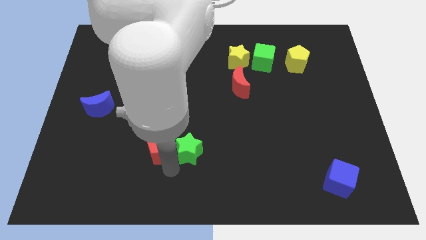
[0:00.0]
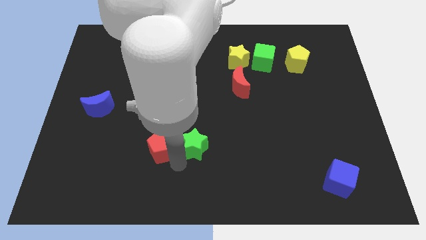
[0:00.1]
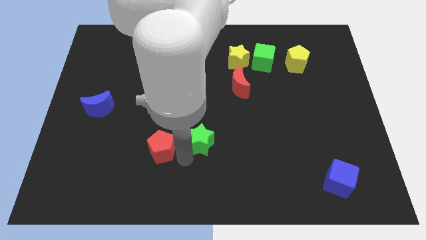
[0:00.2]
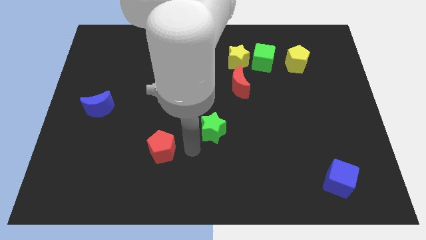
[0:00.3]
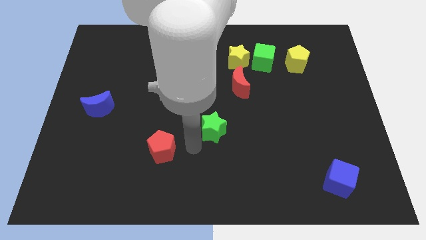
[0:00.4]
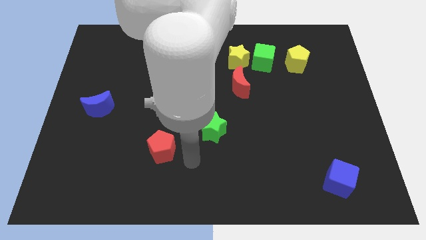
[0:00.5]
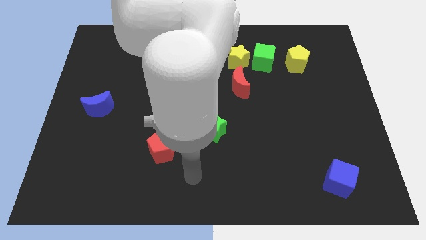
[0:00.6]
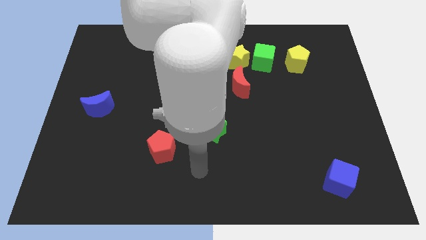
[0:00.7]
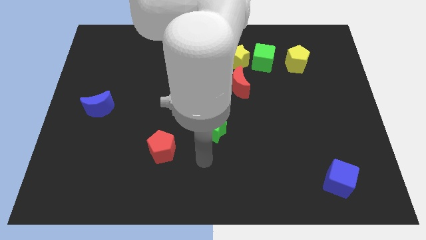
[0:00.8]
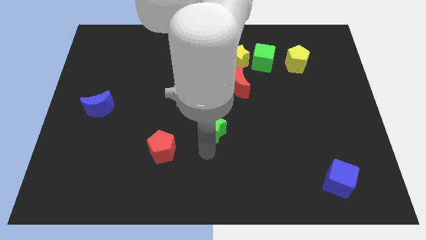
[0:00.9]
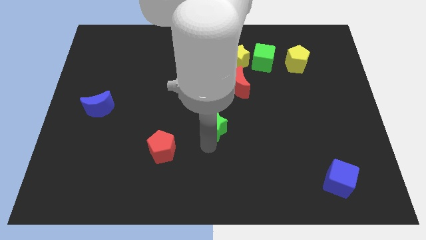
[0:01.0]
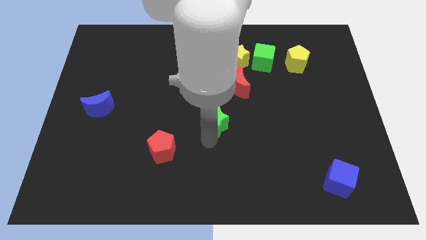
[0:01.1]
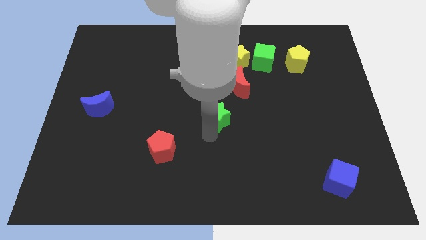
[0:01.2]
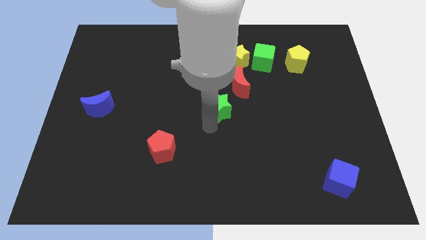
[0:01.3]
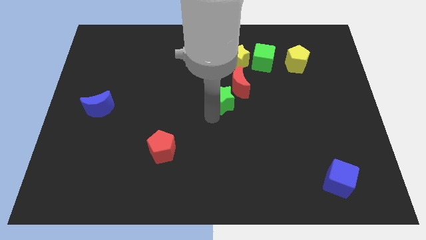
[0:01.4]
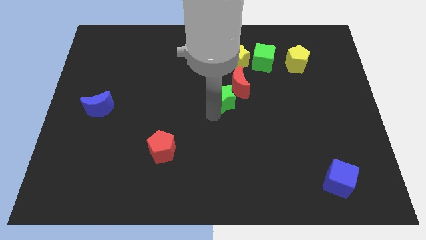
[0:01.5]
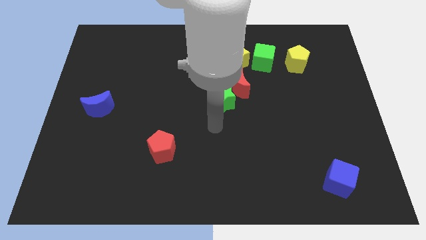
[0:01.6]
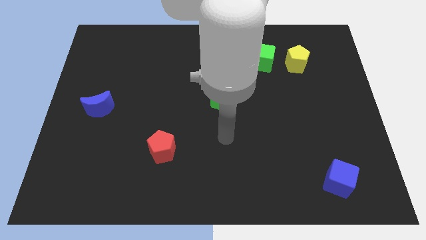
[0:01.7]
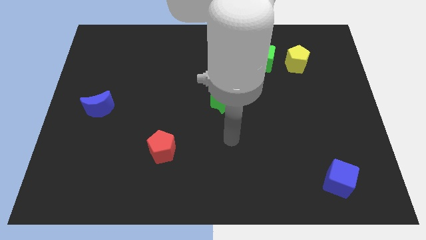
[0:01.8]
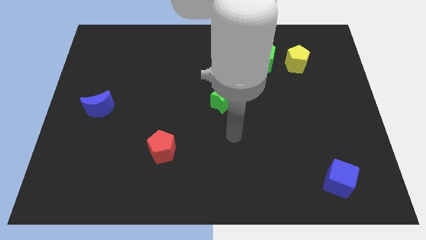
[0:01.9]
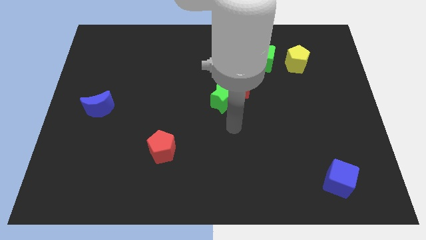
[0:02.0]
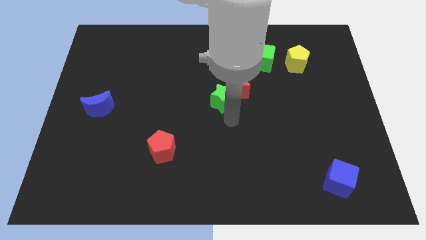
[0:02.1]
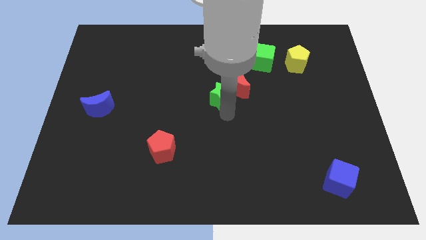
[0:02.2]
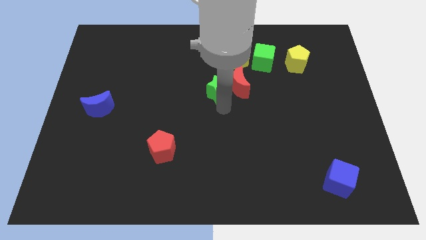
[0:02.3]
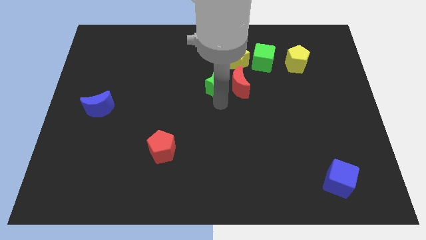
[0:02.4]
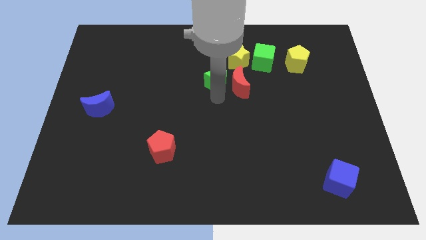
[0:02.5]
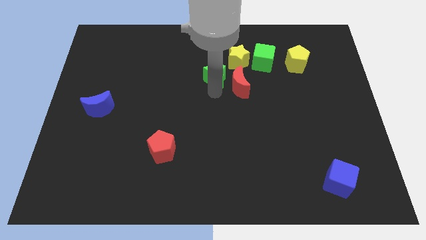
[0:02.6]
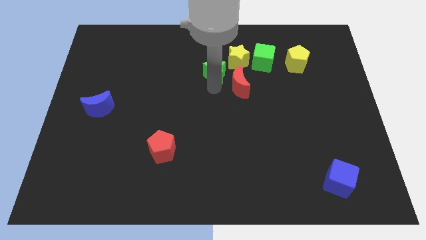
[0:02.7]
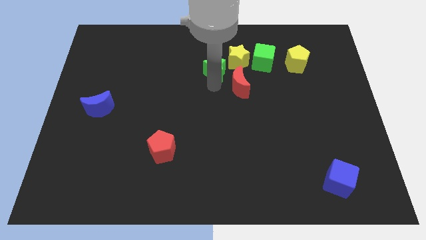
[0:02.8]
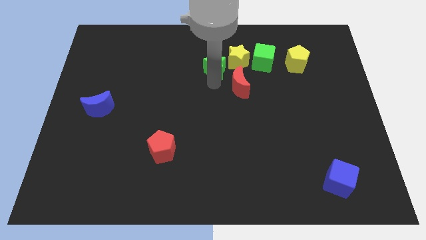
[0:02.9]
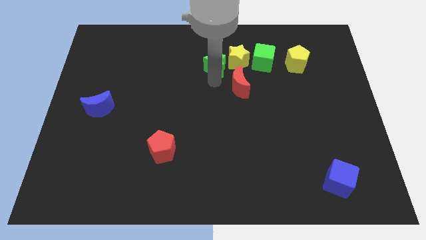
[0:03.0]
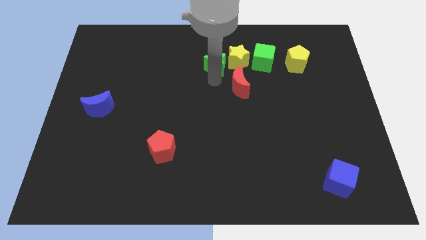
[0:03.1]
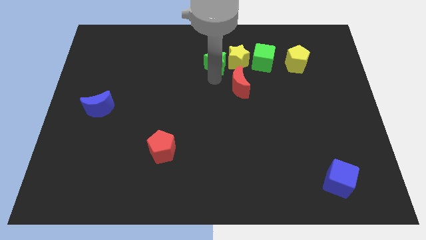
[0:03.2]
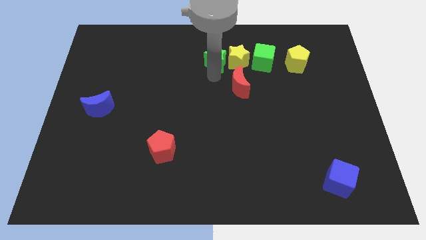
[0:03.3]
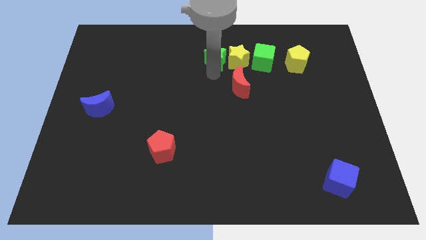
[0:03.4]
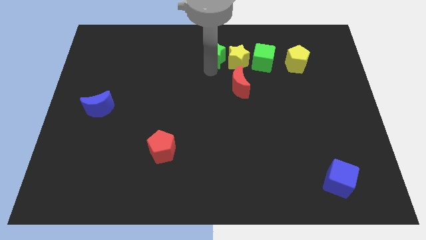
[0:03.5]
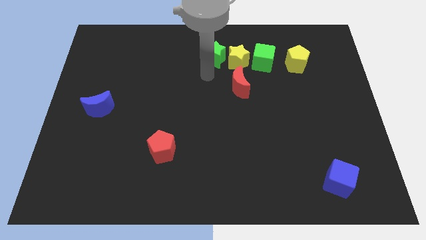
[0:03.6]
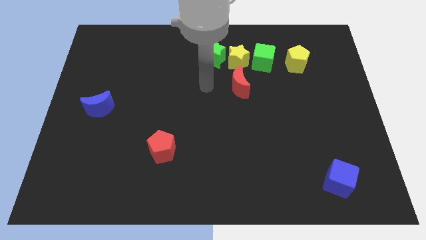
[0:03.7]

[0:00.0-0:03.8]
place the green star at the left side of the yellow star

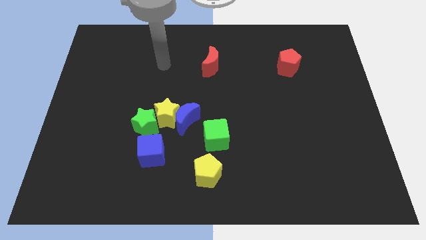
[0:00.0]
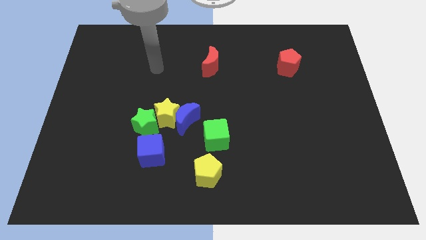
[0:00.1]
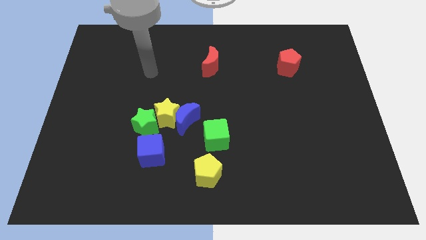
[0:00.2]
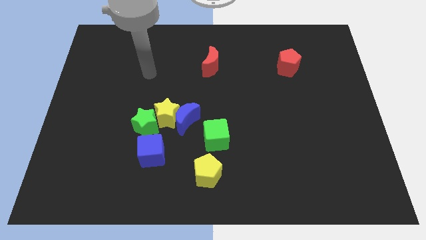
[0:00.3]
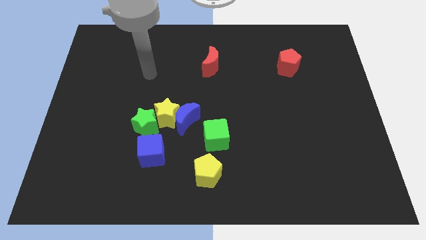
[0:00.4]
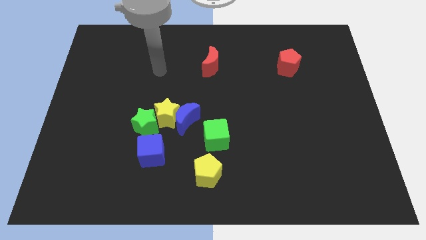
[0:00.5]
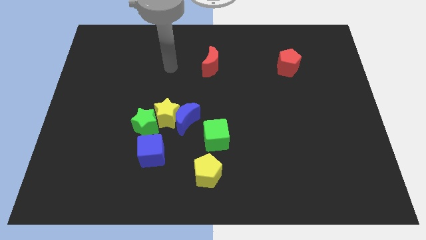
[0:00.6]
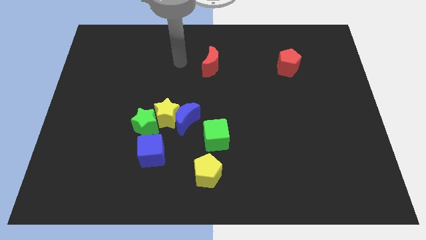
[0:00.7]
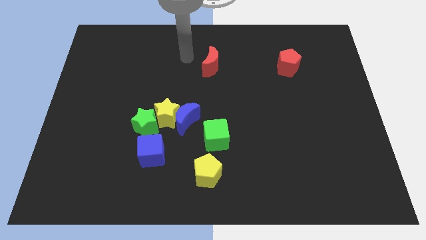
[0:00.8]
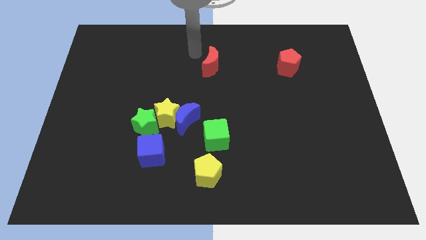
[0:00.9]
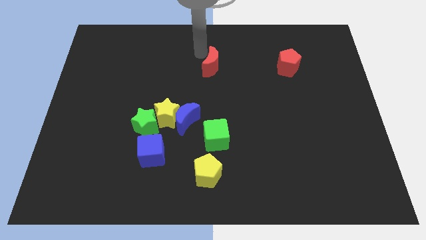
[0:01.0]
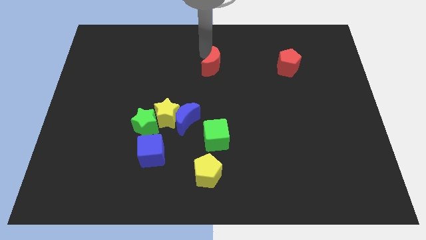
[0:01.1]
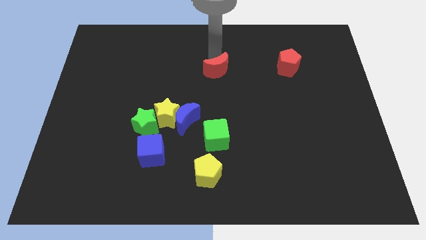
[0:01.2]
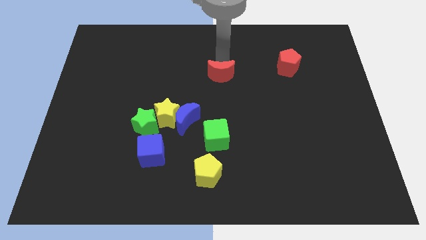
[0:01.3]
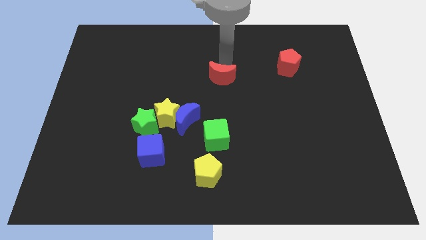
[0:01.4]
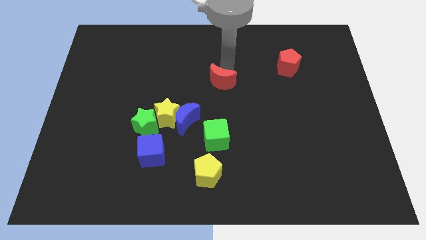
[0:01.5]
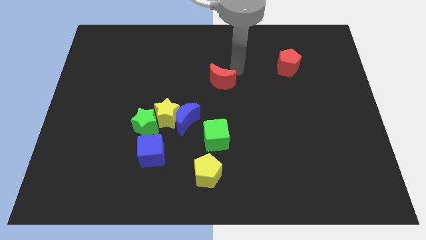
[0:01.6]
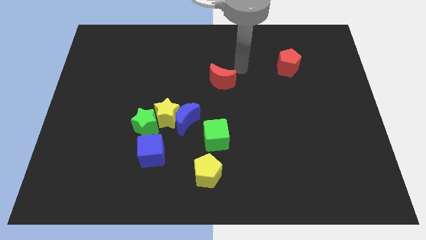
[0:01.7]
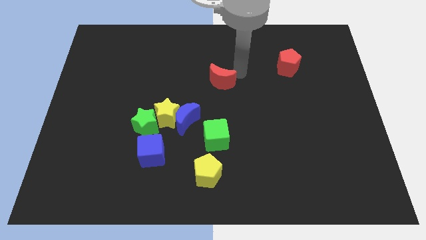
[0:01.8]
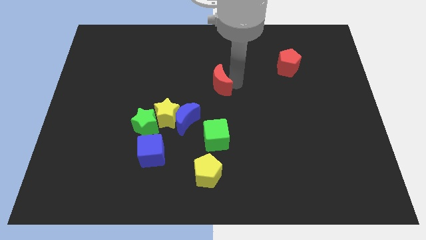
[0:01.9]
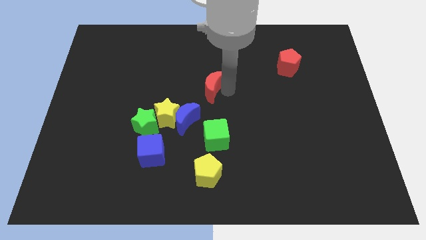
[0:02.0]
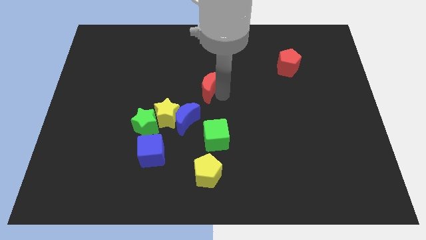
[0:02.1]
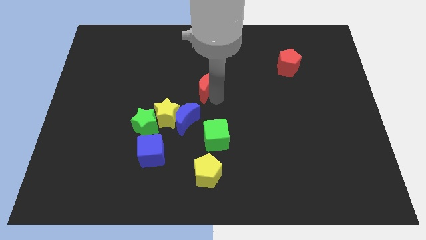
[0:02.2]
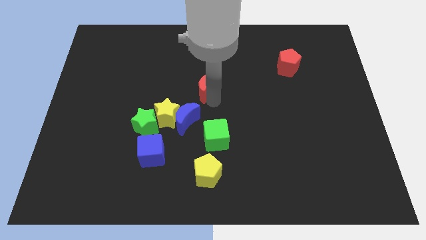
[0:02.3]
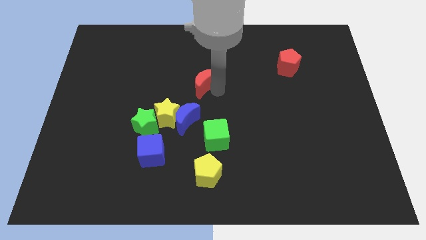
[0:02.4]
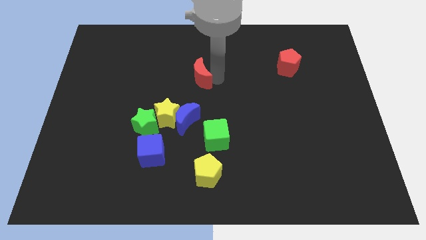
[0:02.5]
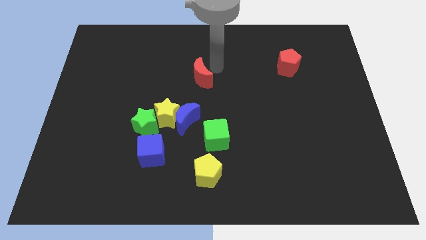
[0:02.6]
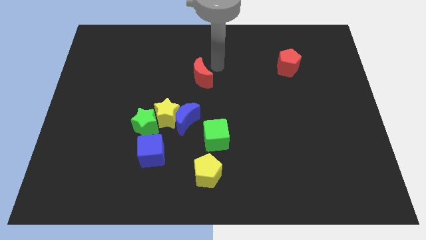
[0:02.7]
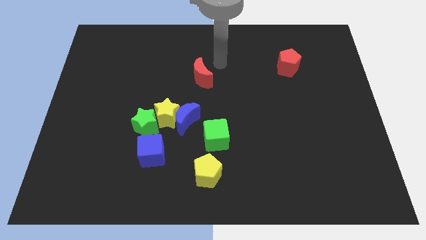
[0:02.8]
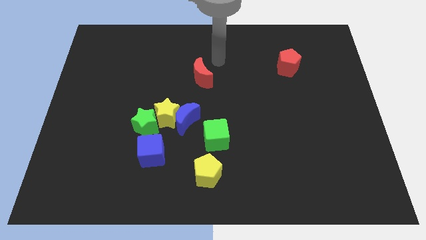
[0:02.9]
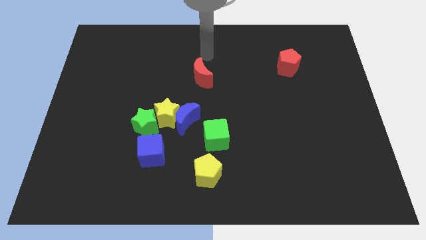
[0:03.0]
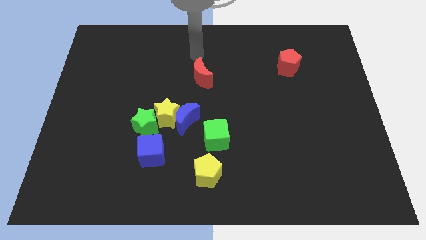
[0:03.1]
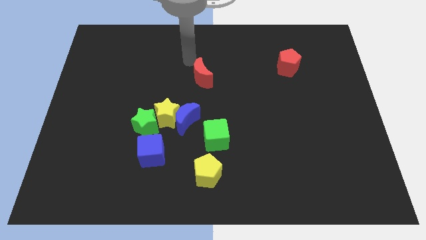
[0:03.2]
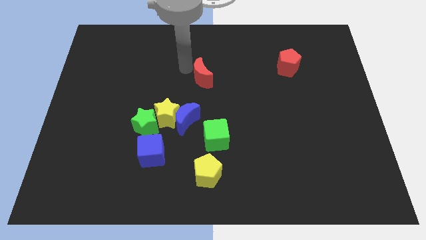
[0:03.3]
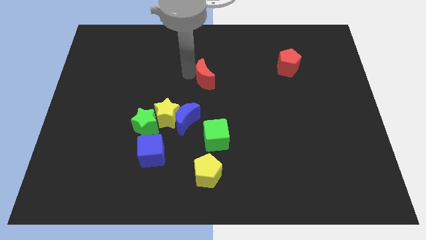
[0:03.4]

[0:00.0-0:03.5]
move the red moon above the green cube

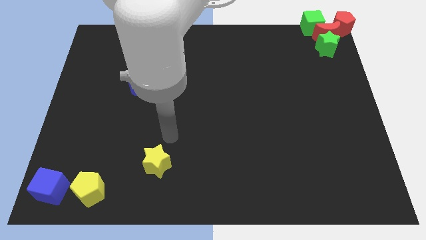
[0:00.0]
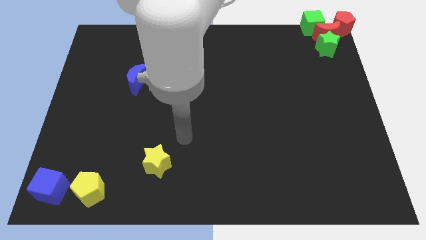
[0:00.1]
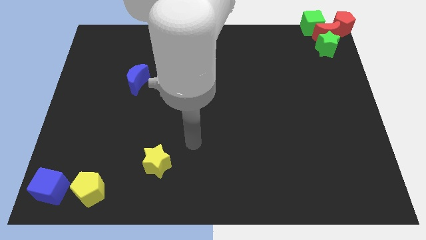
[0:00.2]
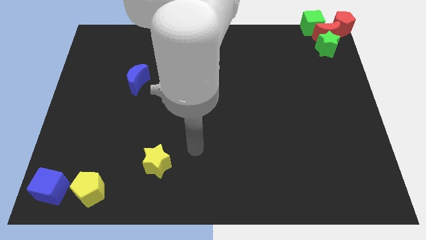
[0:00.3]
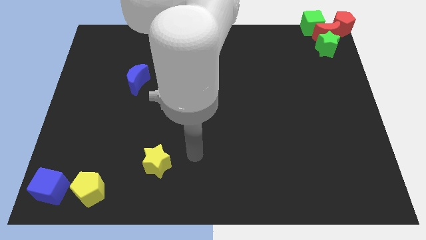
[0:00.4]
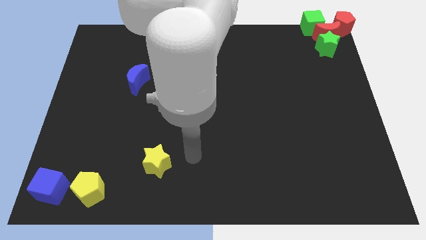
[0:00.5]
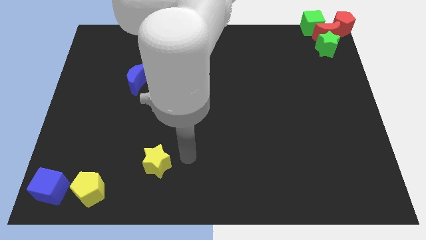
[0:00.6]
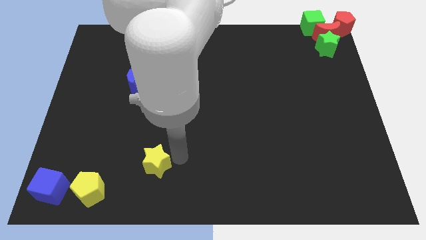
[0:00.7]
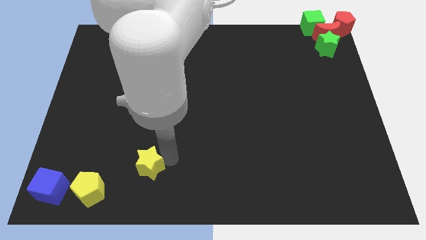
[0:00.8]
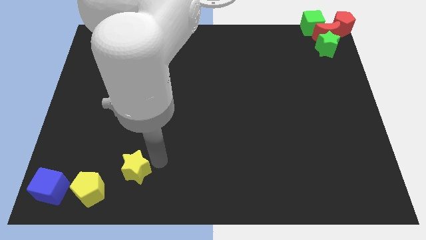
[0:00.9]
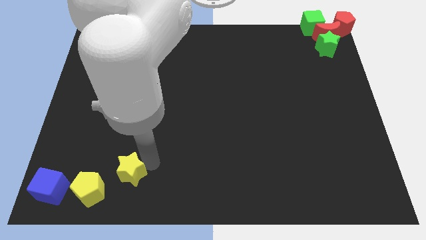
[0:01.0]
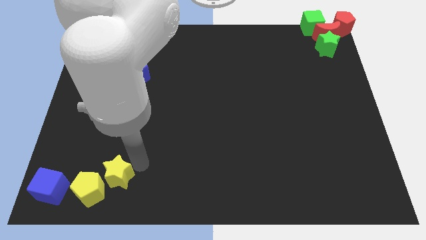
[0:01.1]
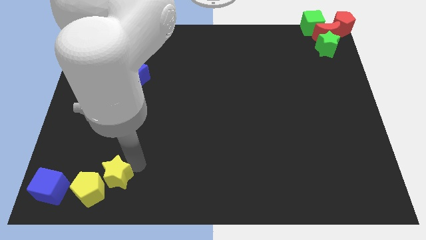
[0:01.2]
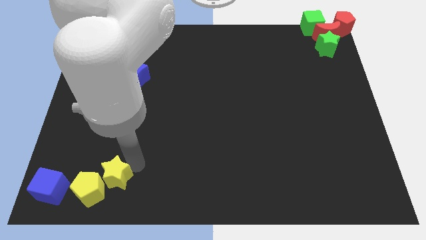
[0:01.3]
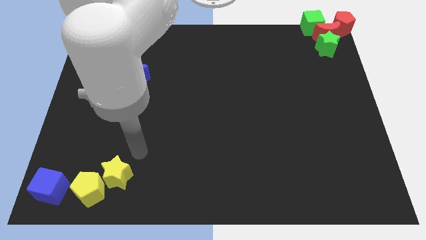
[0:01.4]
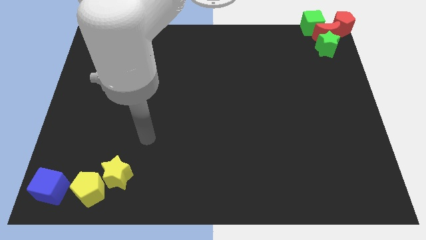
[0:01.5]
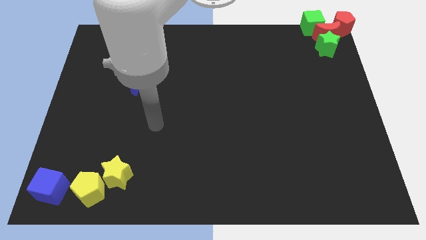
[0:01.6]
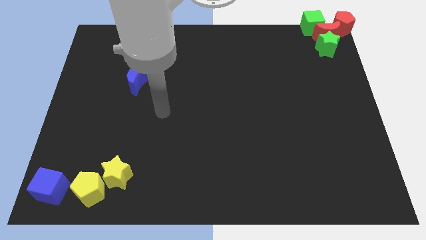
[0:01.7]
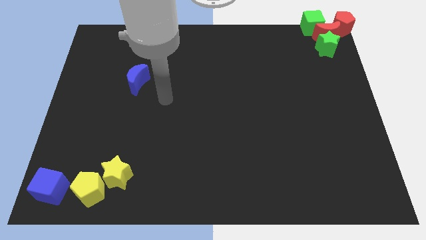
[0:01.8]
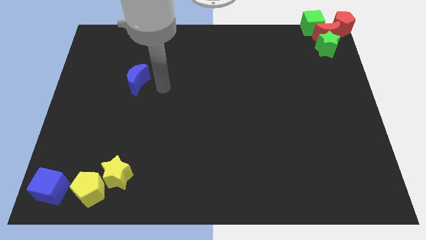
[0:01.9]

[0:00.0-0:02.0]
push the yellow star close to the yellow pentagon
